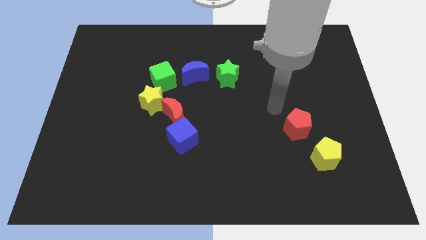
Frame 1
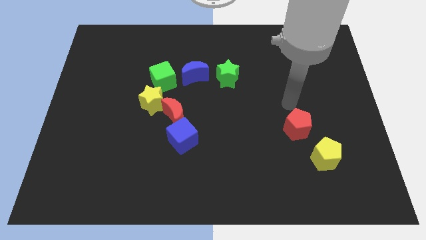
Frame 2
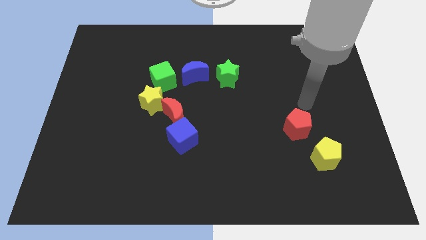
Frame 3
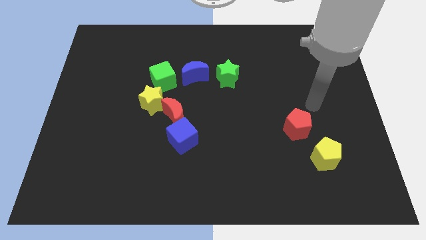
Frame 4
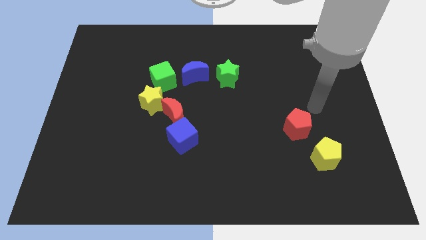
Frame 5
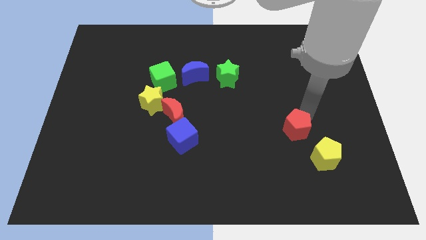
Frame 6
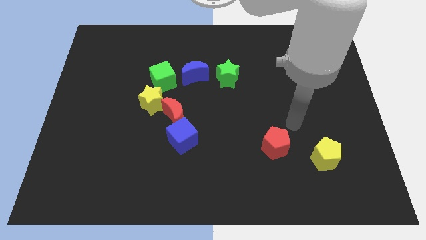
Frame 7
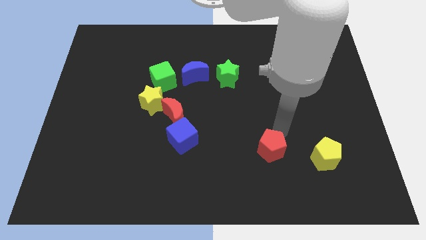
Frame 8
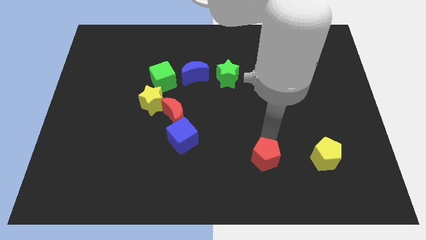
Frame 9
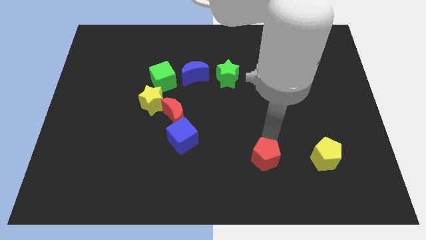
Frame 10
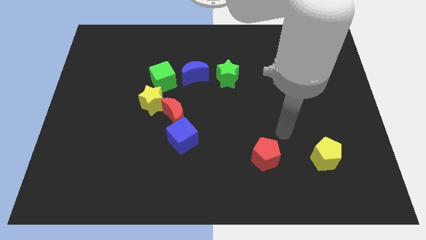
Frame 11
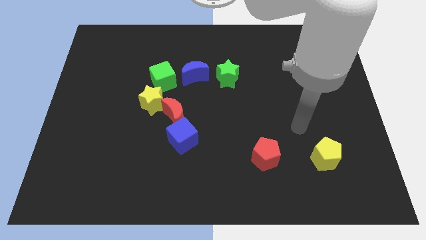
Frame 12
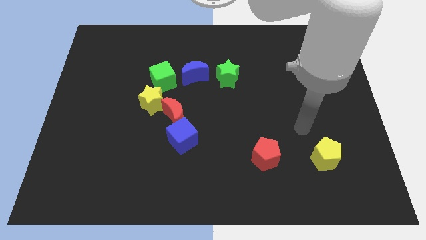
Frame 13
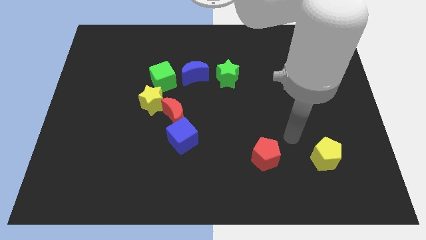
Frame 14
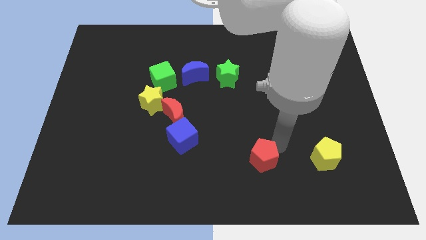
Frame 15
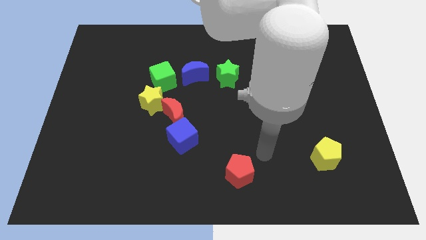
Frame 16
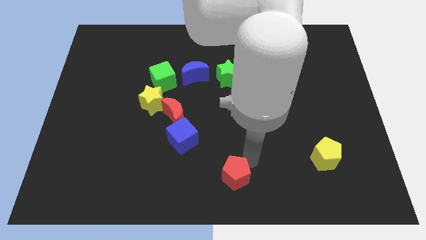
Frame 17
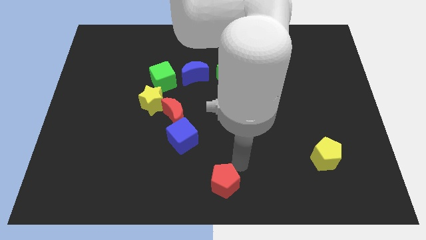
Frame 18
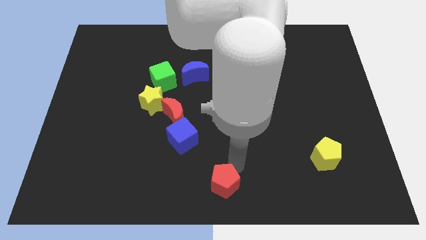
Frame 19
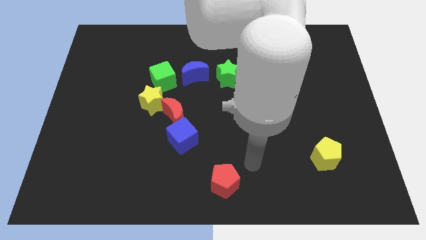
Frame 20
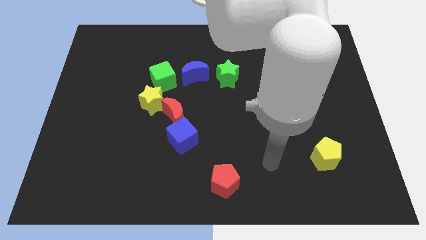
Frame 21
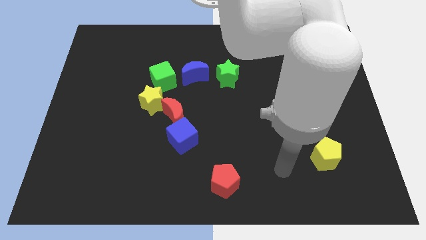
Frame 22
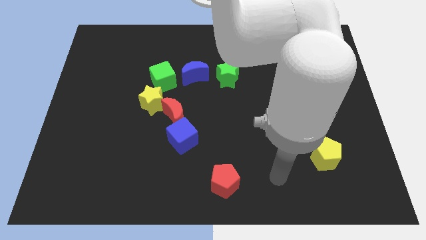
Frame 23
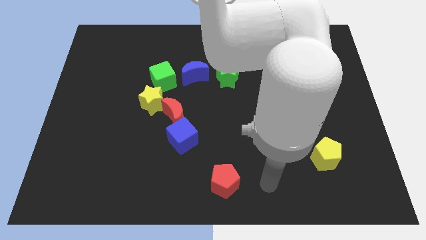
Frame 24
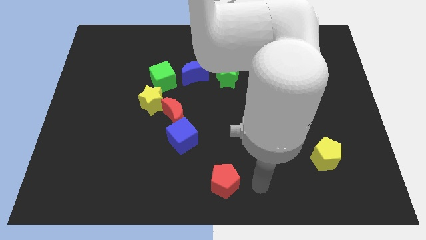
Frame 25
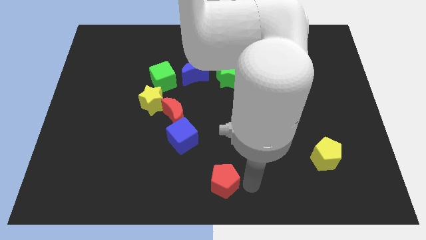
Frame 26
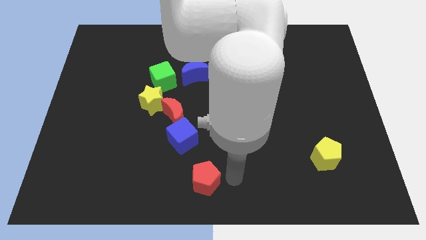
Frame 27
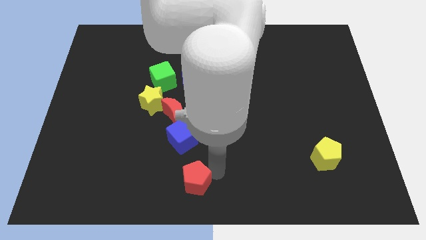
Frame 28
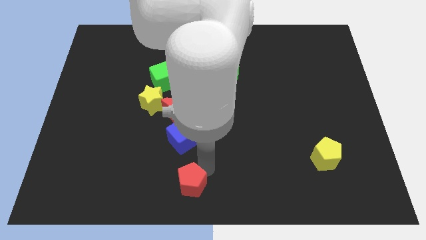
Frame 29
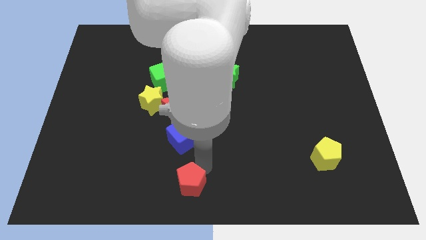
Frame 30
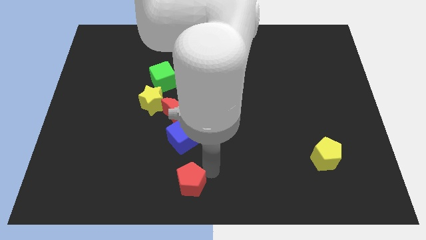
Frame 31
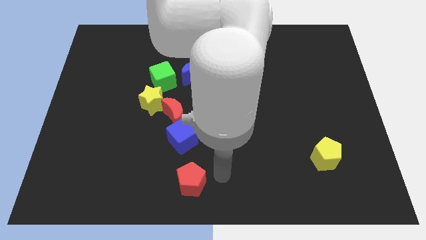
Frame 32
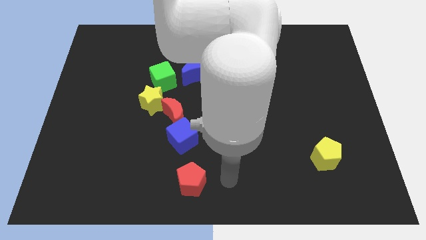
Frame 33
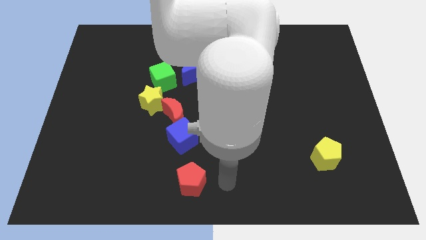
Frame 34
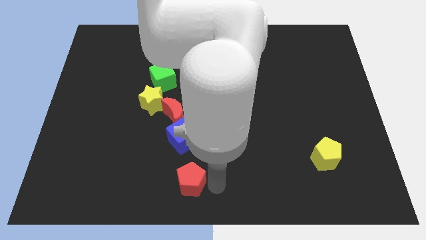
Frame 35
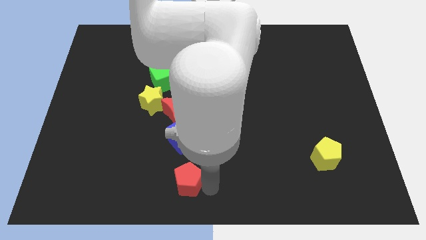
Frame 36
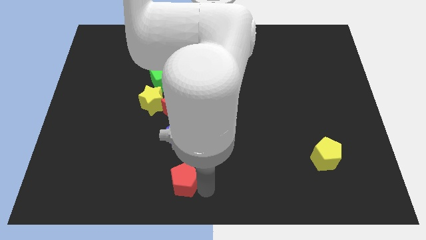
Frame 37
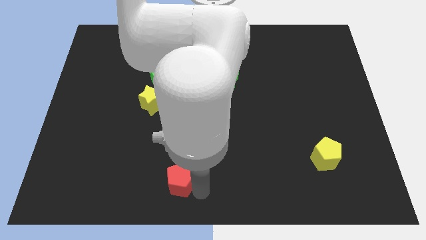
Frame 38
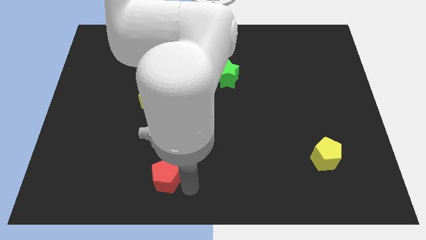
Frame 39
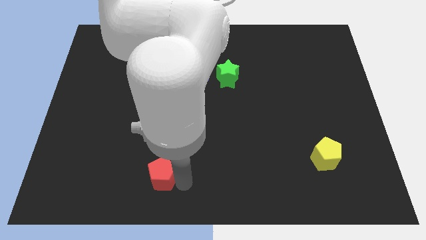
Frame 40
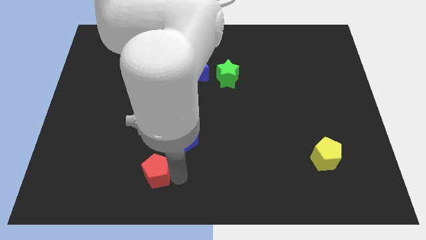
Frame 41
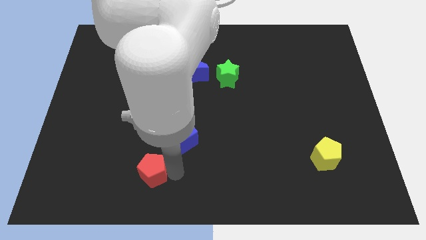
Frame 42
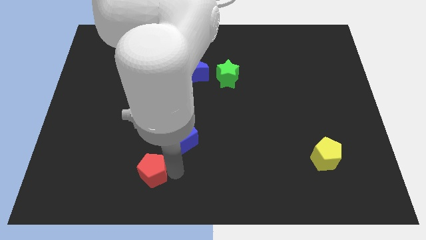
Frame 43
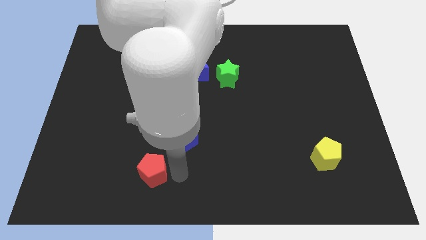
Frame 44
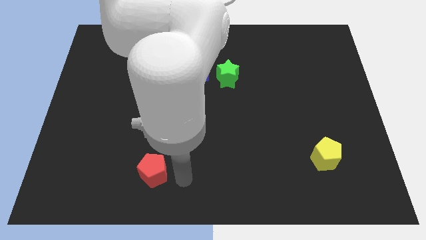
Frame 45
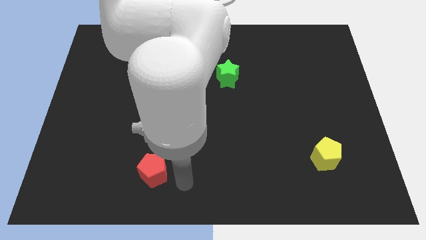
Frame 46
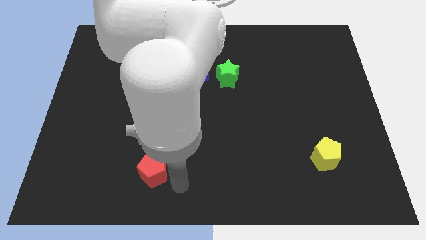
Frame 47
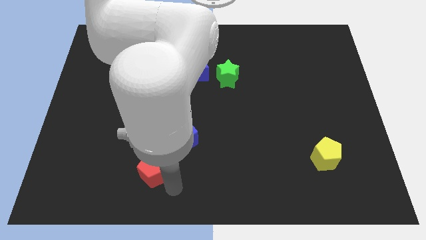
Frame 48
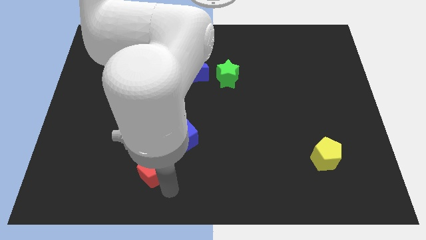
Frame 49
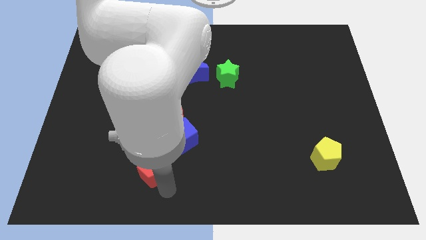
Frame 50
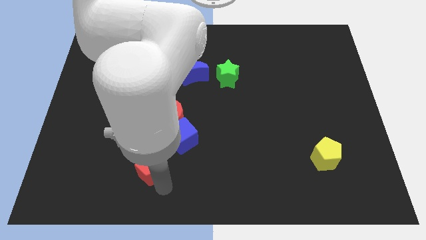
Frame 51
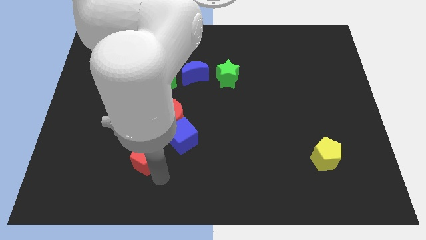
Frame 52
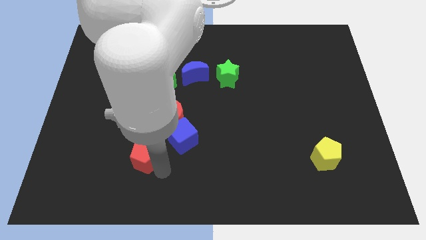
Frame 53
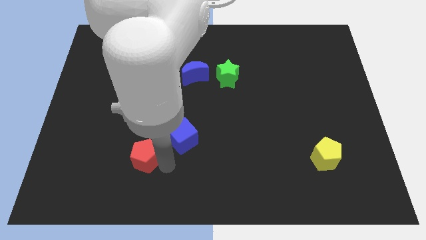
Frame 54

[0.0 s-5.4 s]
place the red pentagon below the blue cube

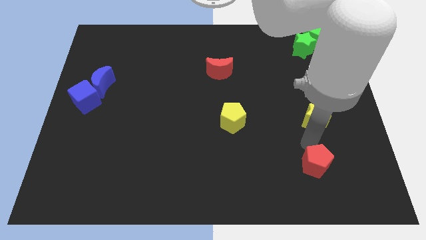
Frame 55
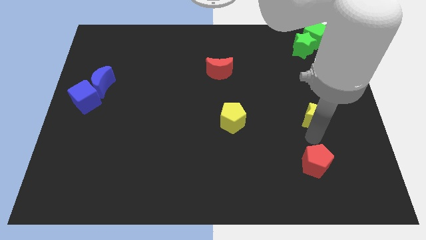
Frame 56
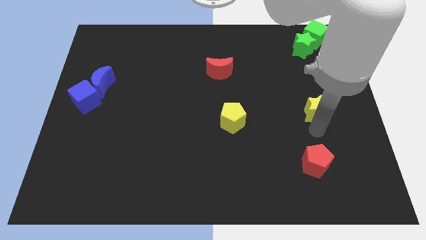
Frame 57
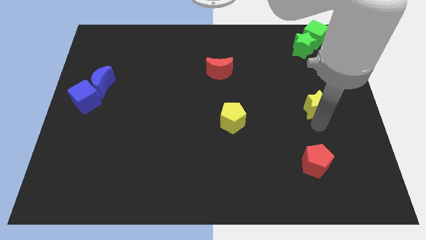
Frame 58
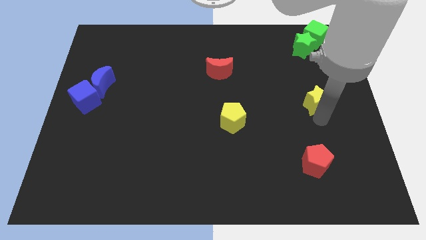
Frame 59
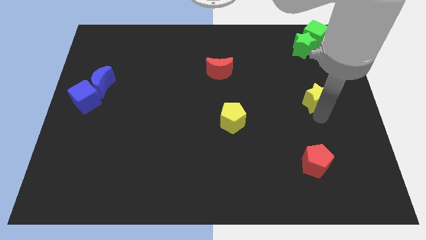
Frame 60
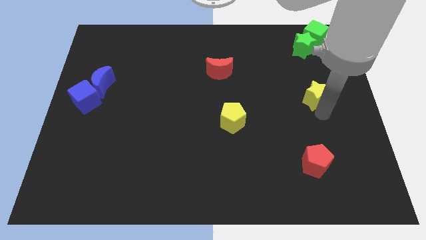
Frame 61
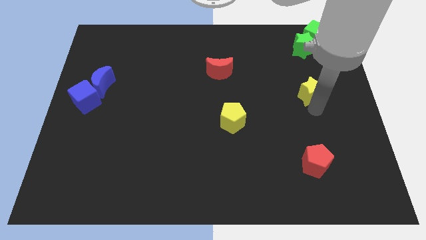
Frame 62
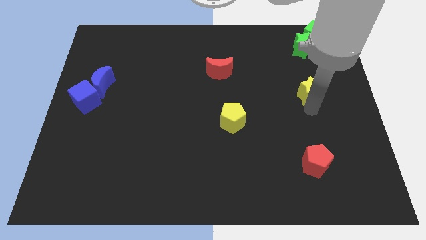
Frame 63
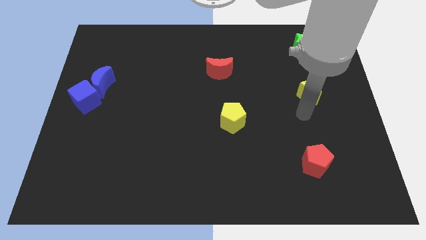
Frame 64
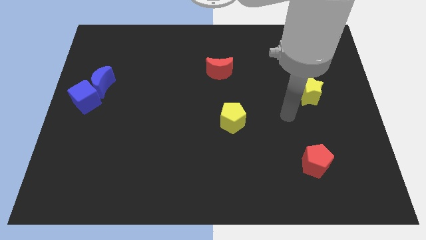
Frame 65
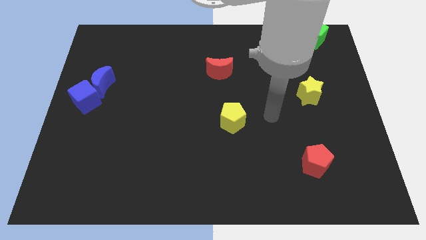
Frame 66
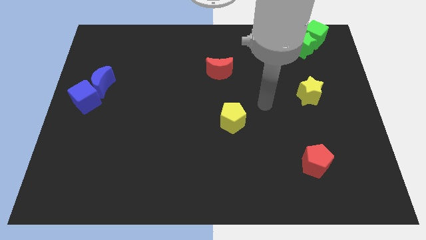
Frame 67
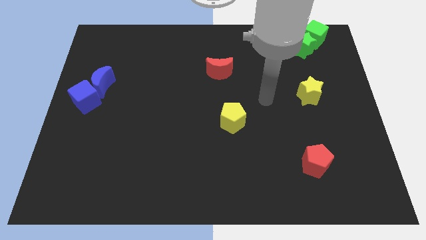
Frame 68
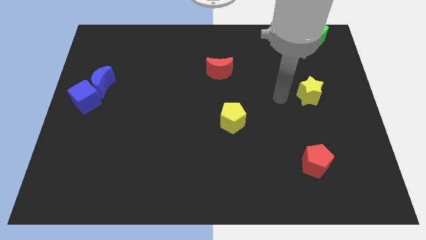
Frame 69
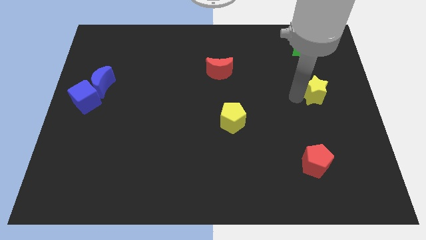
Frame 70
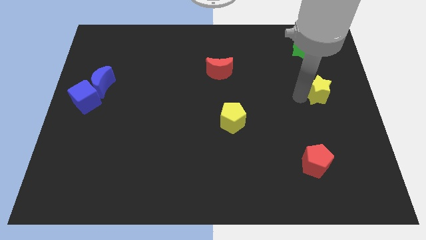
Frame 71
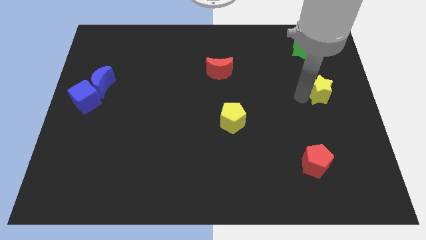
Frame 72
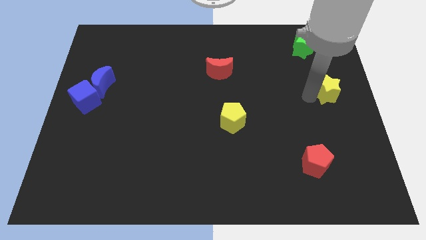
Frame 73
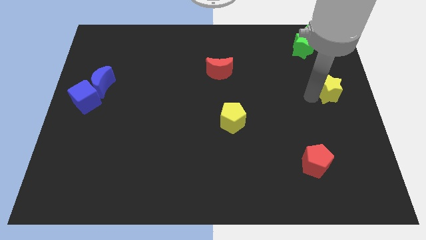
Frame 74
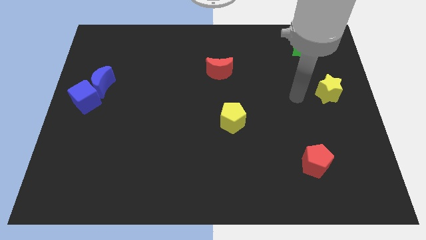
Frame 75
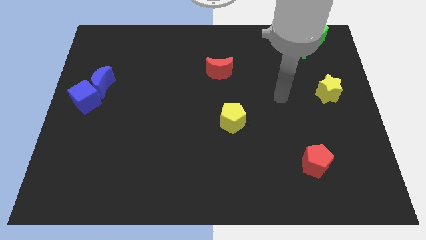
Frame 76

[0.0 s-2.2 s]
push the yellow star towards the right side of the board

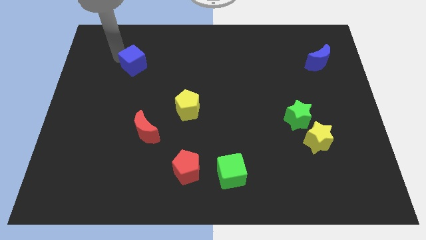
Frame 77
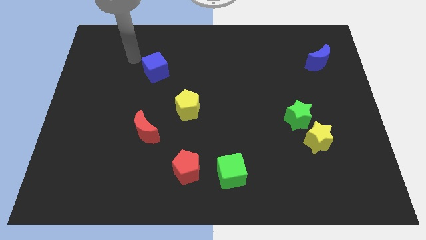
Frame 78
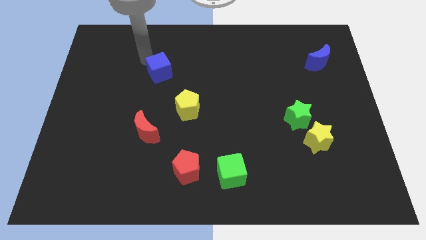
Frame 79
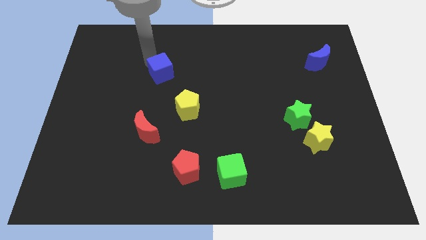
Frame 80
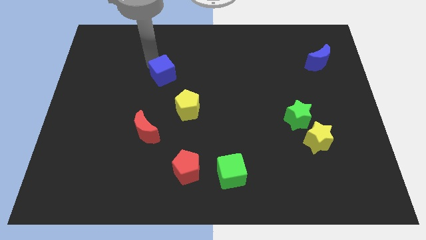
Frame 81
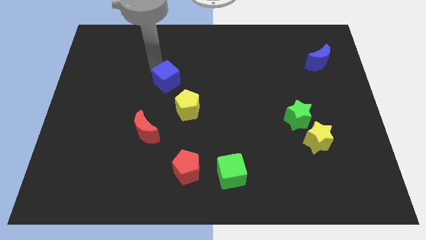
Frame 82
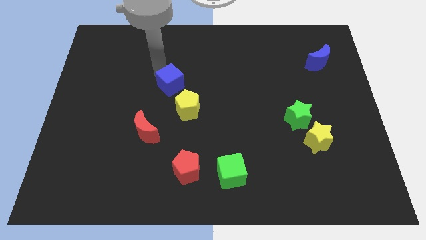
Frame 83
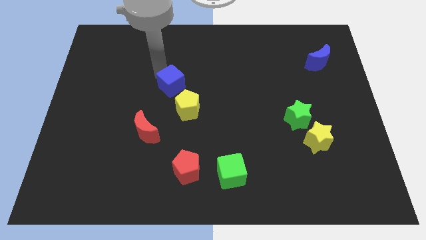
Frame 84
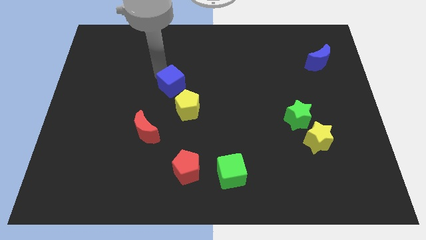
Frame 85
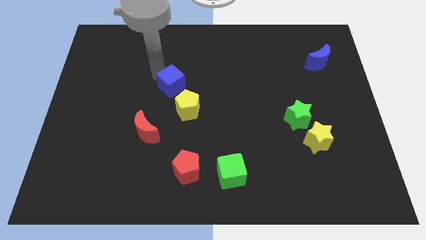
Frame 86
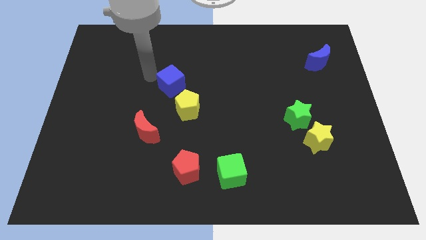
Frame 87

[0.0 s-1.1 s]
move the blue cube to the top left to the yellow pentagon

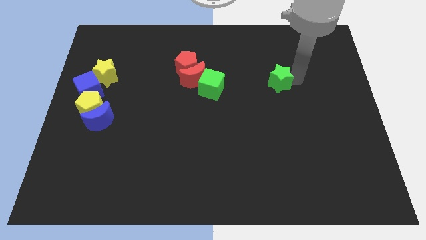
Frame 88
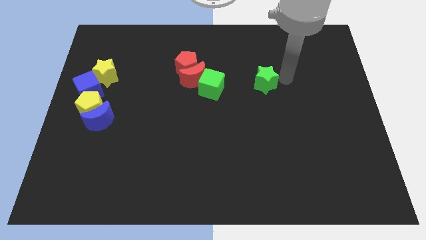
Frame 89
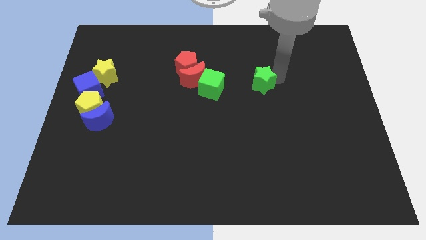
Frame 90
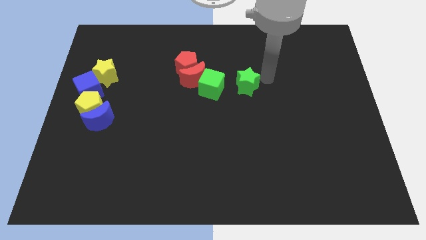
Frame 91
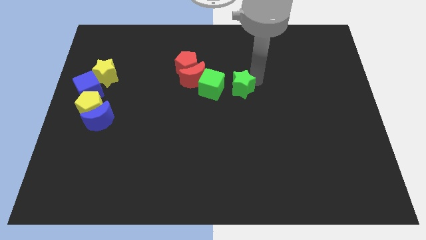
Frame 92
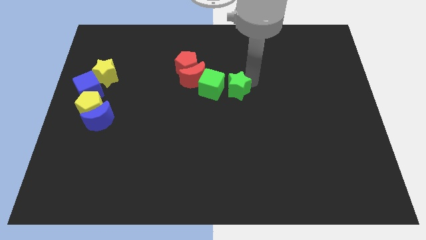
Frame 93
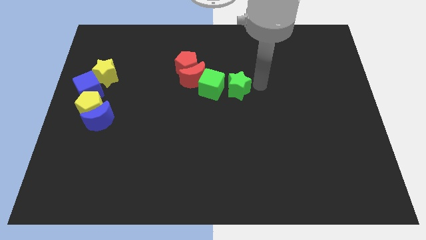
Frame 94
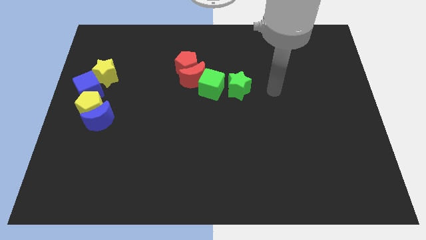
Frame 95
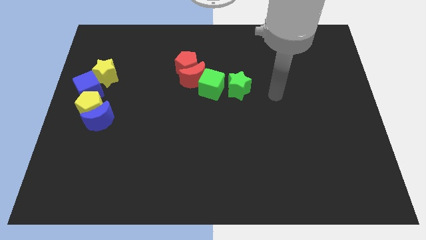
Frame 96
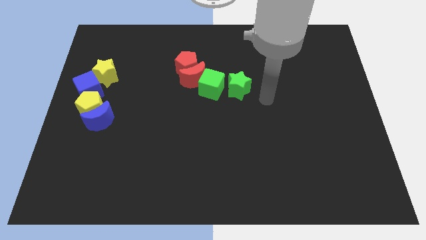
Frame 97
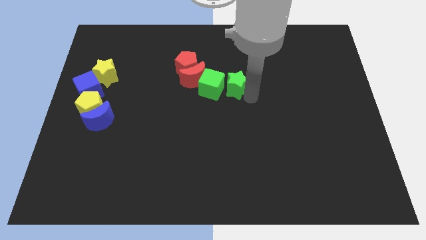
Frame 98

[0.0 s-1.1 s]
move the green star to the center
